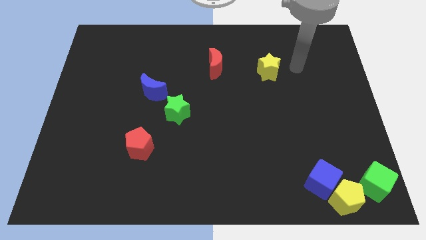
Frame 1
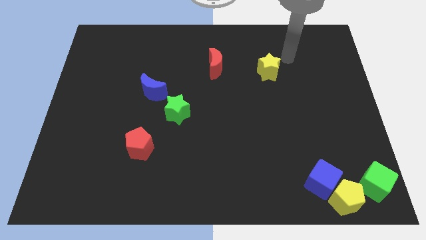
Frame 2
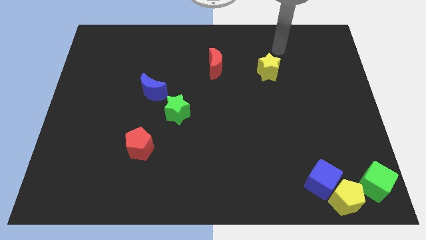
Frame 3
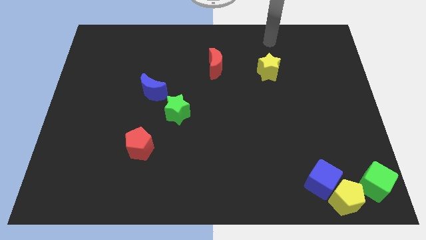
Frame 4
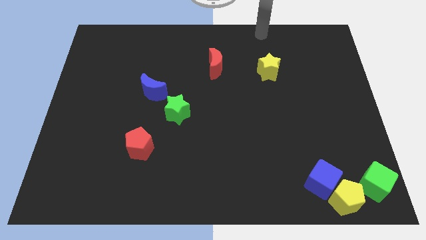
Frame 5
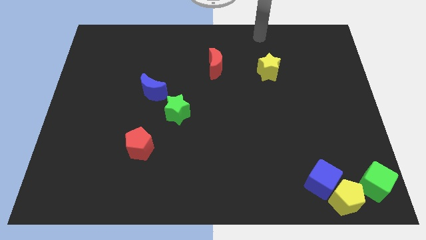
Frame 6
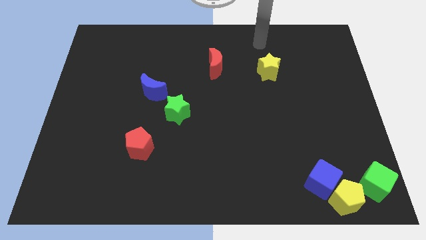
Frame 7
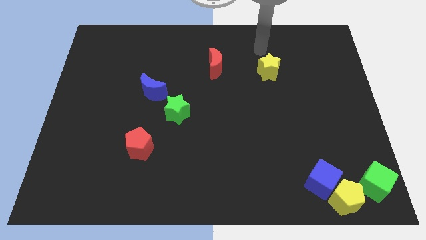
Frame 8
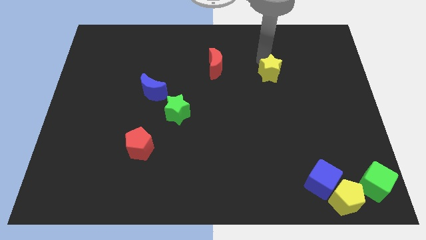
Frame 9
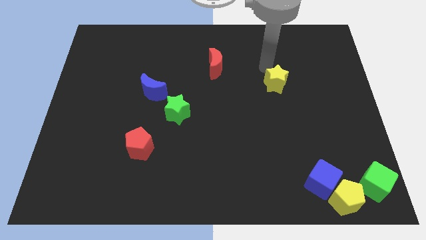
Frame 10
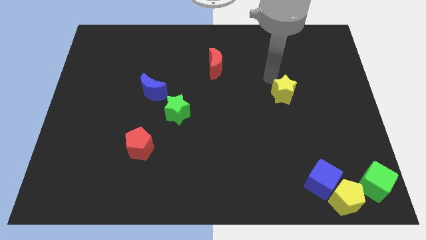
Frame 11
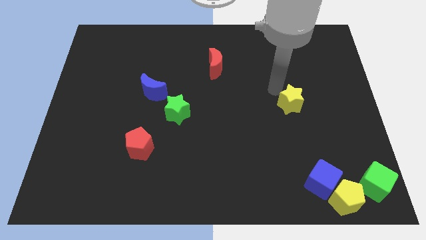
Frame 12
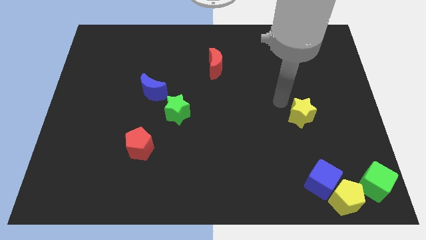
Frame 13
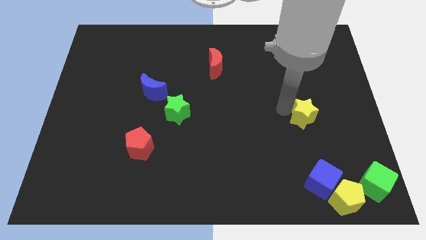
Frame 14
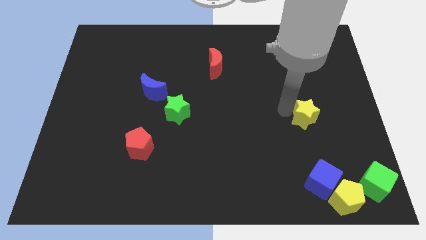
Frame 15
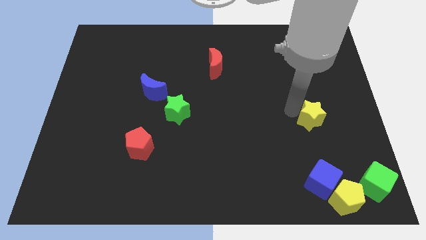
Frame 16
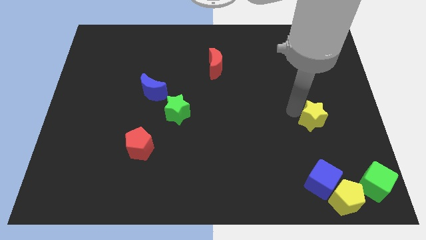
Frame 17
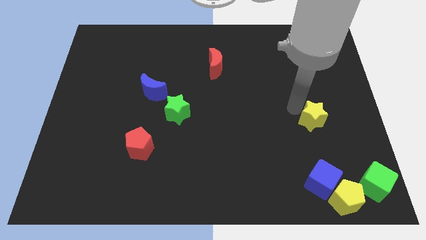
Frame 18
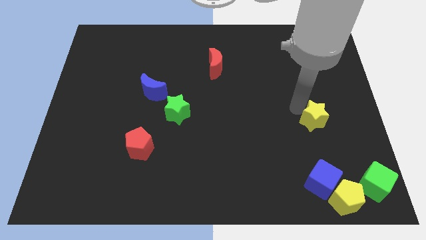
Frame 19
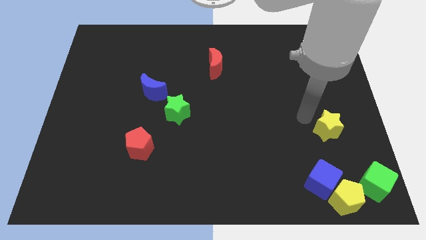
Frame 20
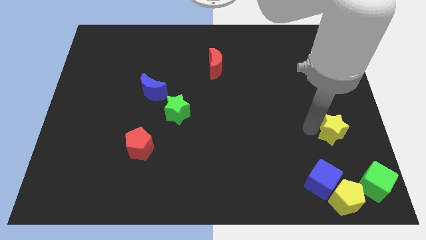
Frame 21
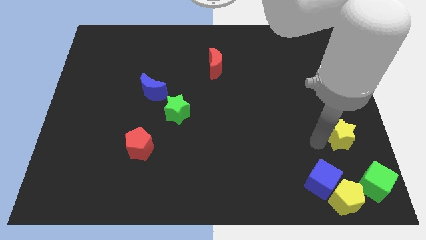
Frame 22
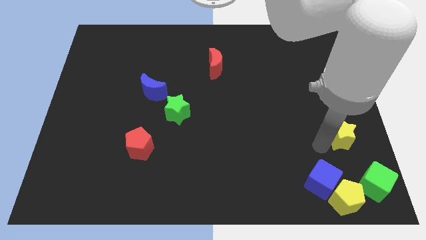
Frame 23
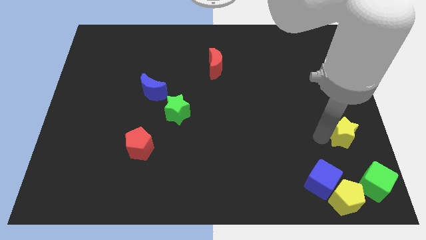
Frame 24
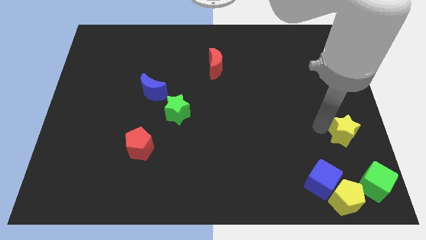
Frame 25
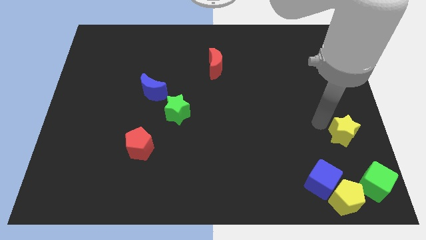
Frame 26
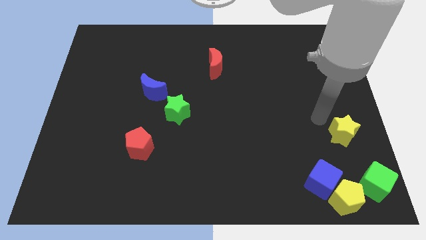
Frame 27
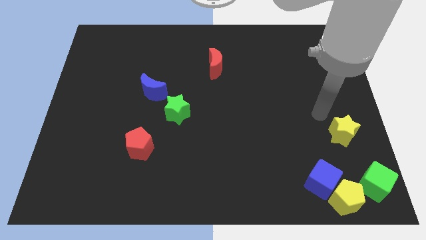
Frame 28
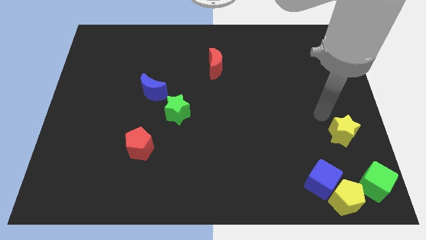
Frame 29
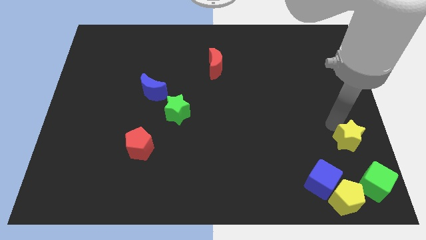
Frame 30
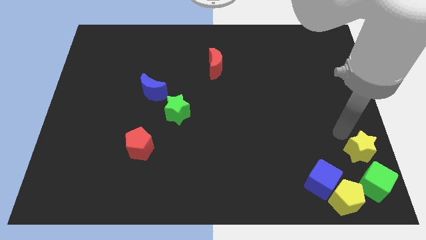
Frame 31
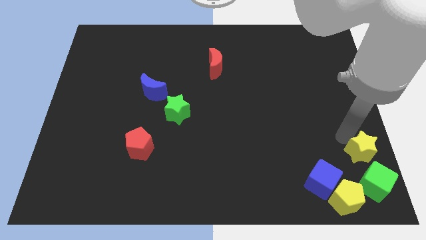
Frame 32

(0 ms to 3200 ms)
place yellow star above green cube

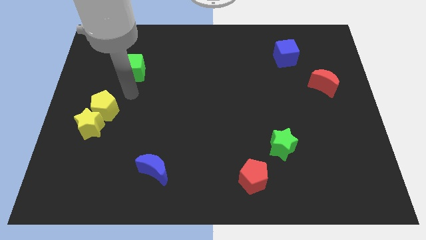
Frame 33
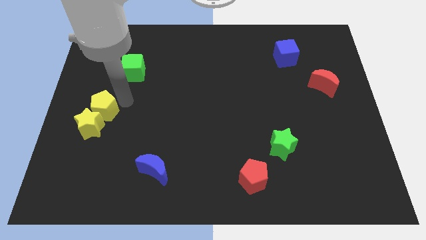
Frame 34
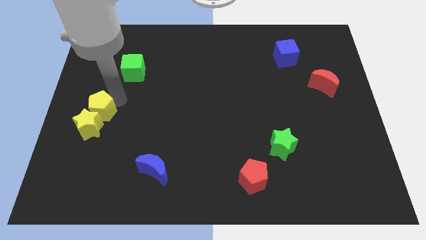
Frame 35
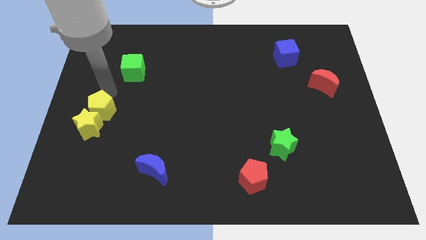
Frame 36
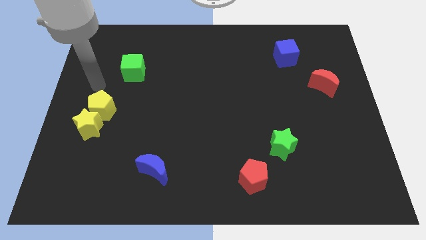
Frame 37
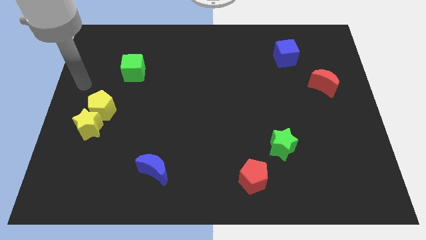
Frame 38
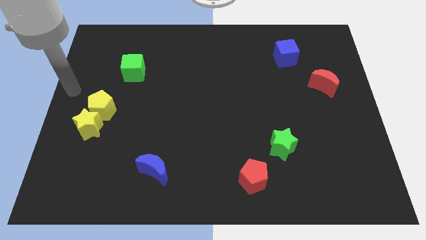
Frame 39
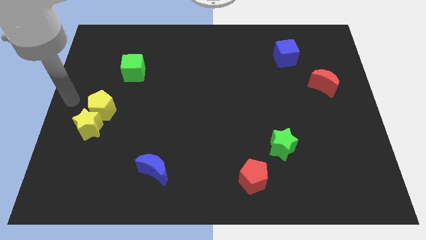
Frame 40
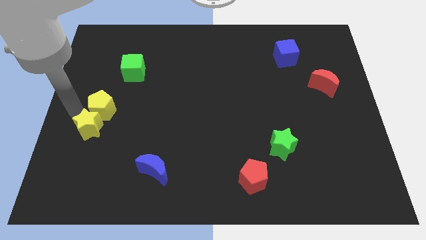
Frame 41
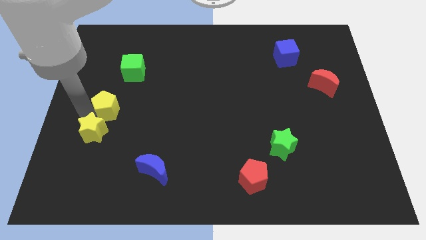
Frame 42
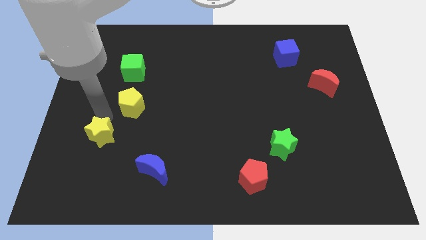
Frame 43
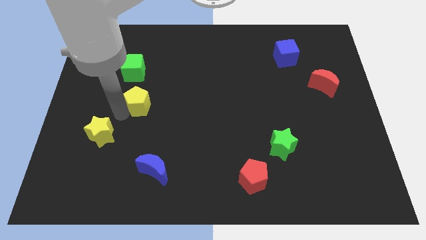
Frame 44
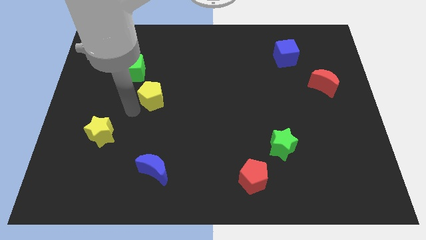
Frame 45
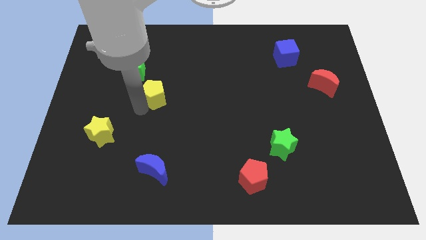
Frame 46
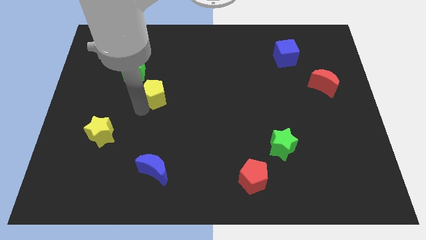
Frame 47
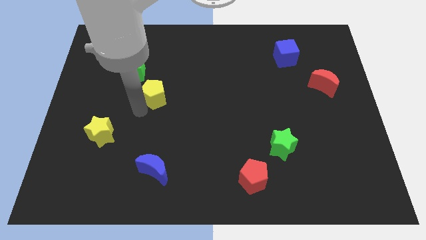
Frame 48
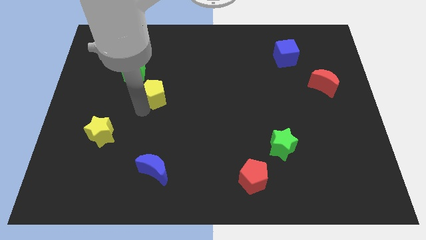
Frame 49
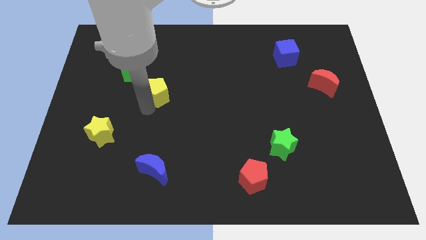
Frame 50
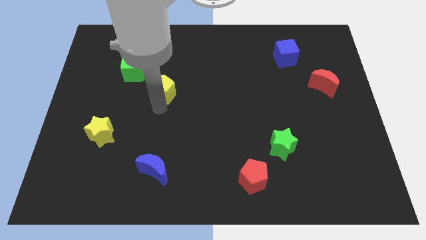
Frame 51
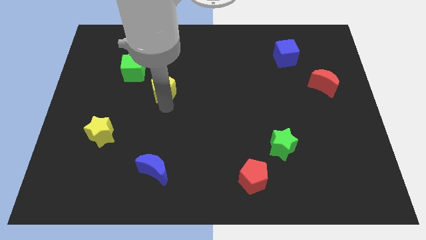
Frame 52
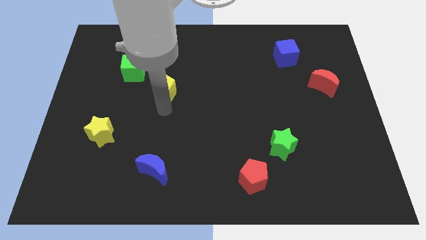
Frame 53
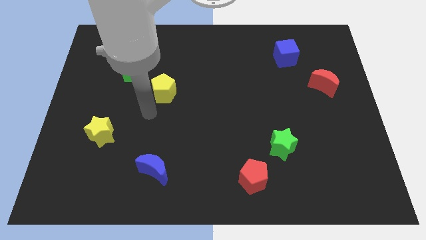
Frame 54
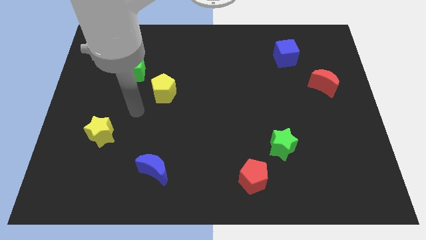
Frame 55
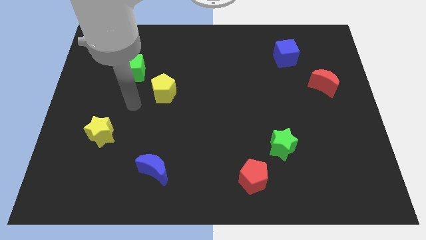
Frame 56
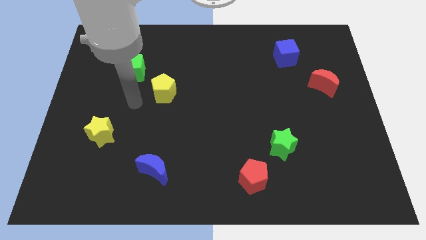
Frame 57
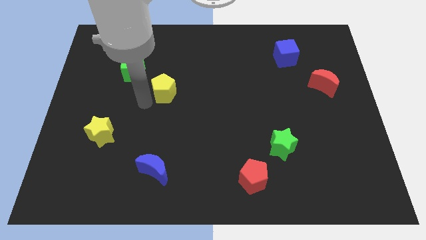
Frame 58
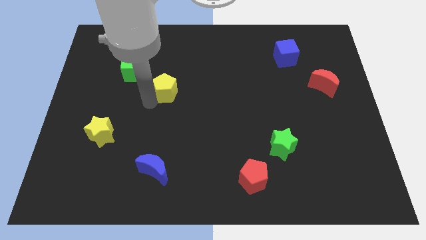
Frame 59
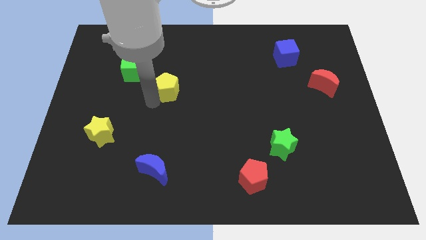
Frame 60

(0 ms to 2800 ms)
place the yellow pentagon to the bottom right of the green cube

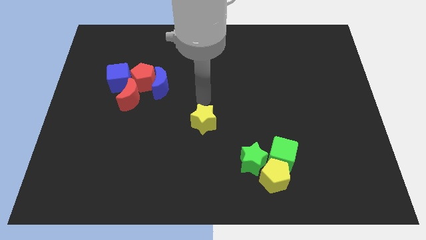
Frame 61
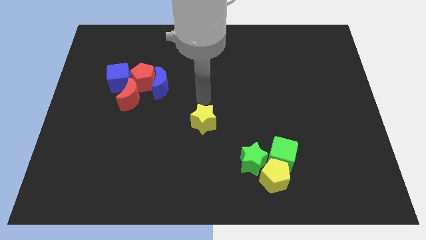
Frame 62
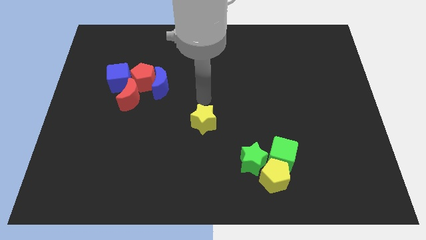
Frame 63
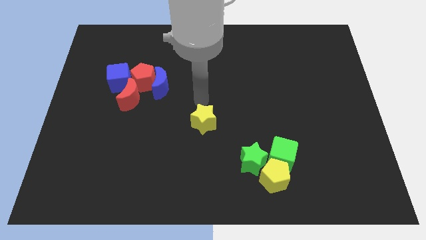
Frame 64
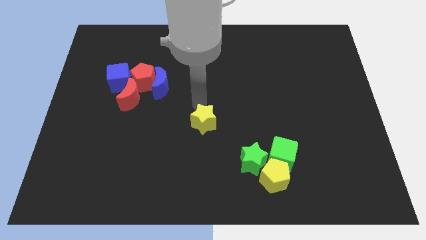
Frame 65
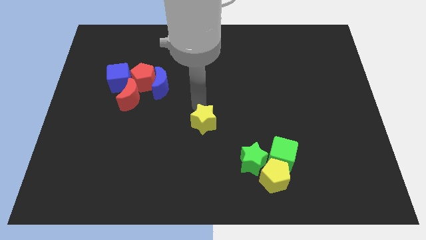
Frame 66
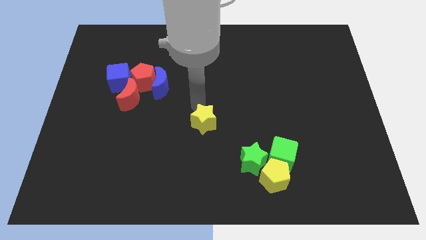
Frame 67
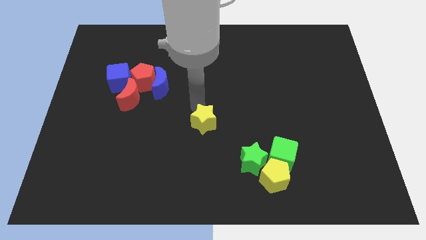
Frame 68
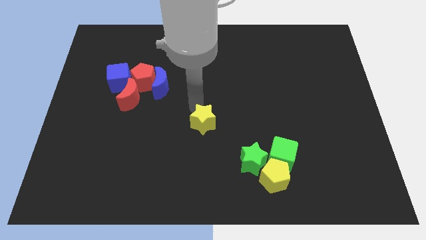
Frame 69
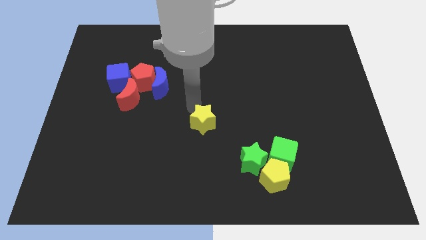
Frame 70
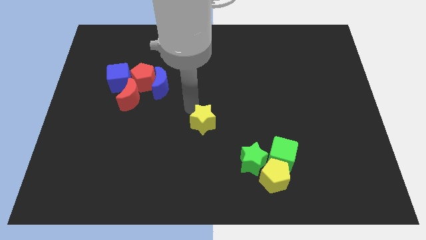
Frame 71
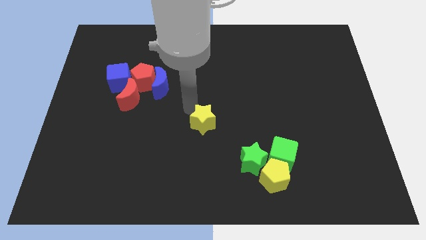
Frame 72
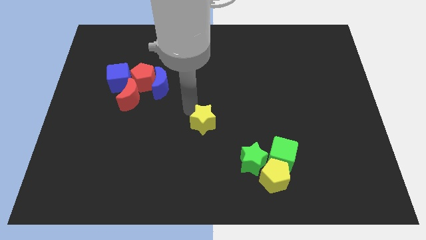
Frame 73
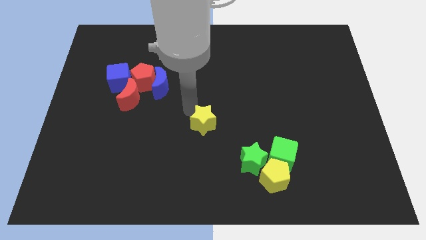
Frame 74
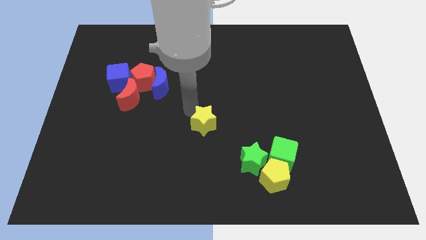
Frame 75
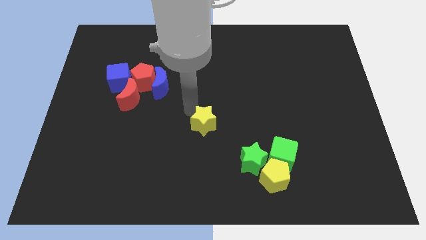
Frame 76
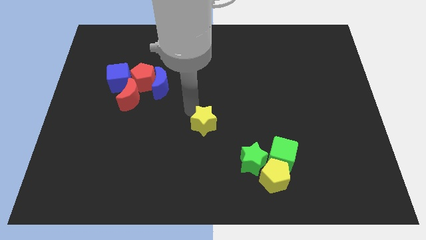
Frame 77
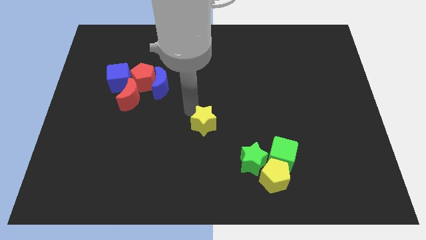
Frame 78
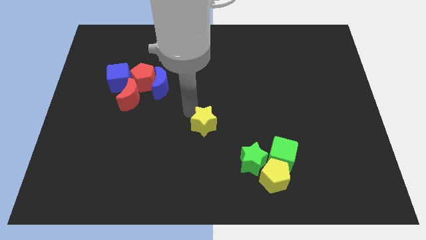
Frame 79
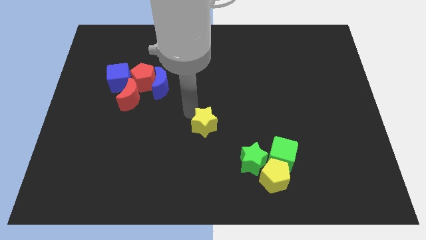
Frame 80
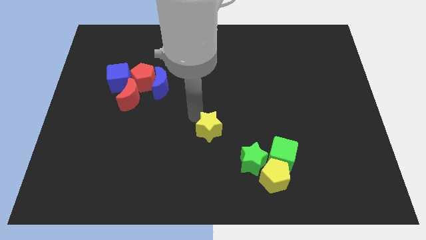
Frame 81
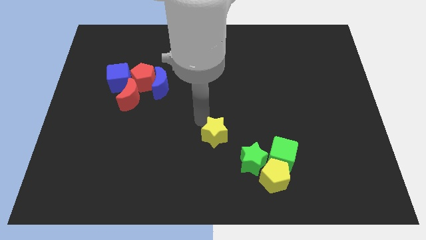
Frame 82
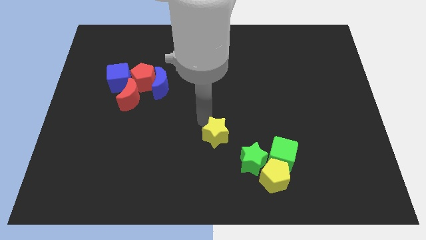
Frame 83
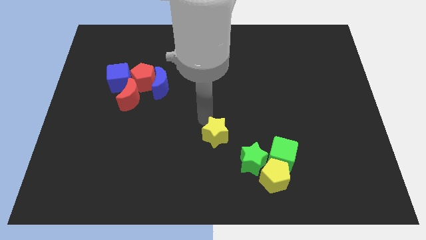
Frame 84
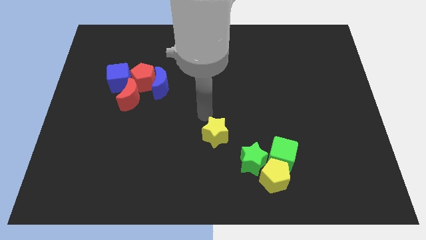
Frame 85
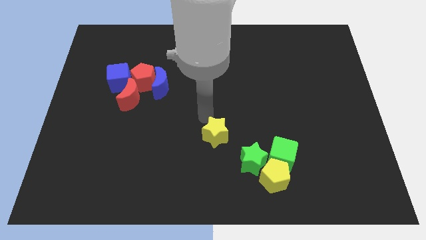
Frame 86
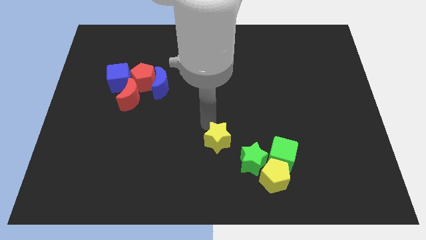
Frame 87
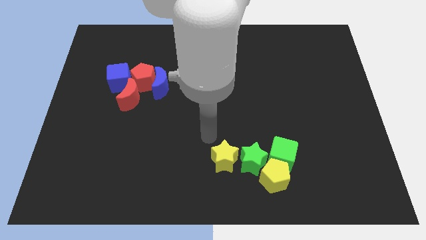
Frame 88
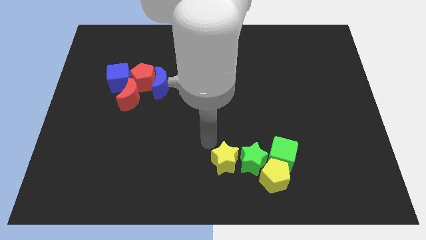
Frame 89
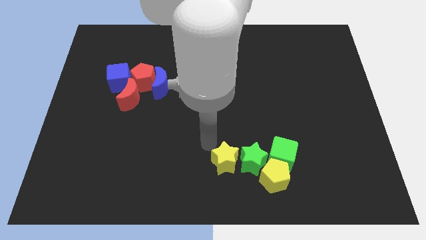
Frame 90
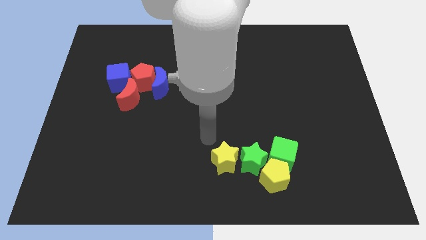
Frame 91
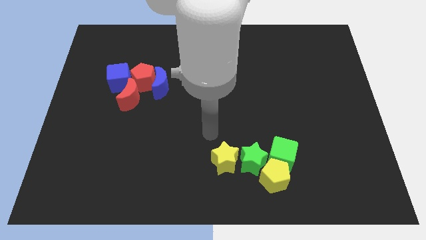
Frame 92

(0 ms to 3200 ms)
place the yellow star left to the green star

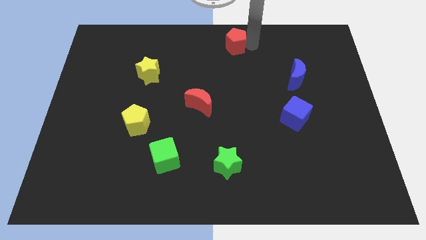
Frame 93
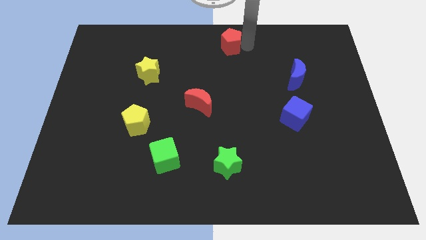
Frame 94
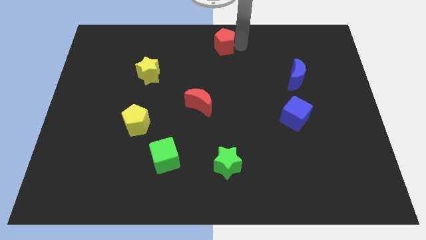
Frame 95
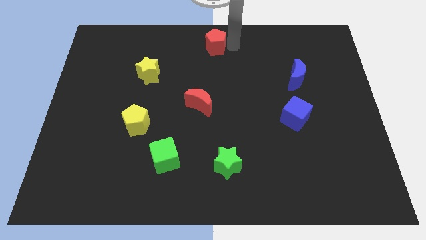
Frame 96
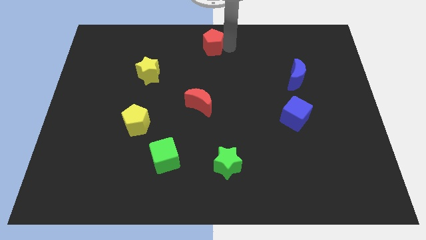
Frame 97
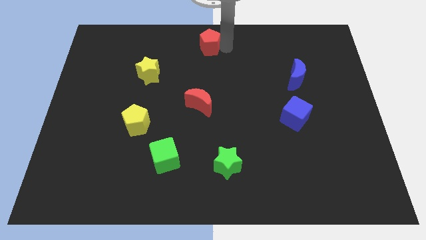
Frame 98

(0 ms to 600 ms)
place the red pentagon at the top center of the board
